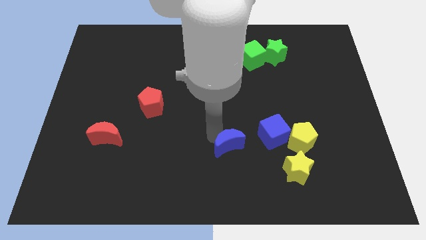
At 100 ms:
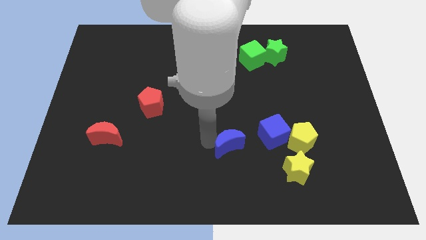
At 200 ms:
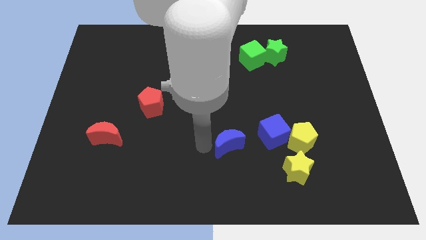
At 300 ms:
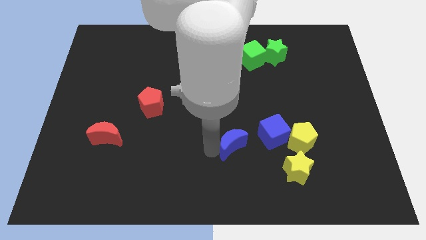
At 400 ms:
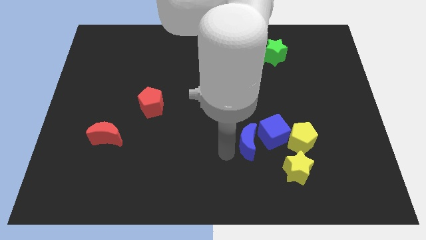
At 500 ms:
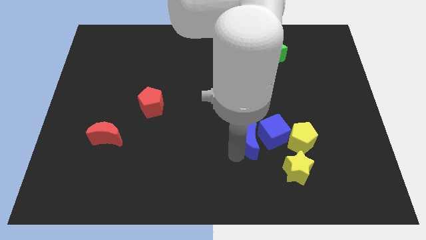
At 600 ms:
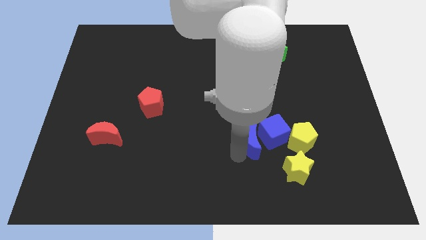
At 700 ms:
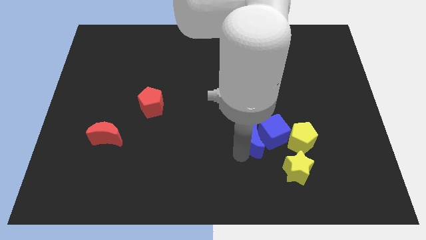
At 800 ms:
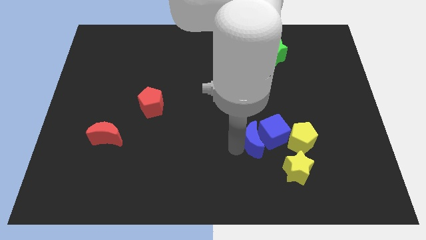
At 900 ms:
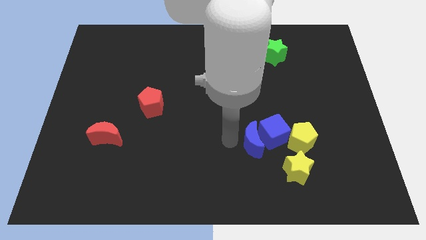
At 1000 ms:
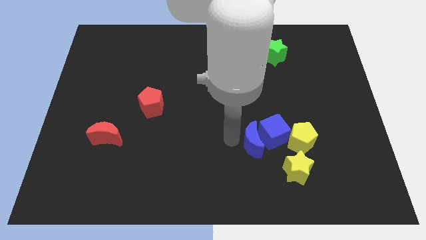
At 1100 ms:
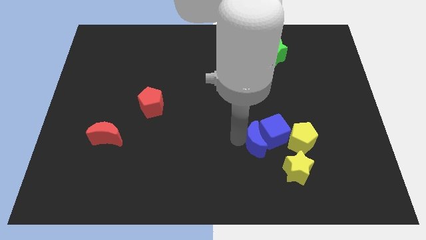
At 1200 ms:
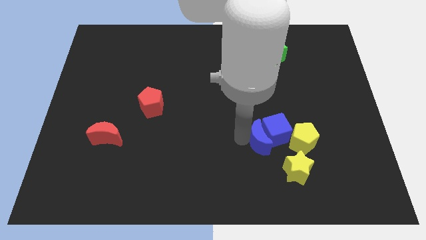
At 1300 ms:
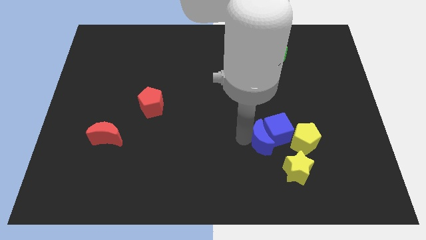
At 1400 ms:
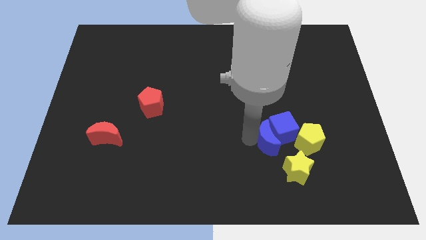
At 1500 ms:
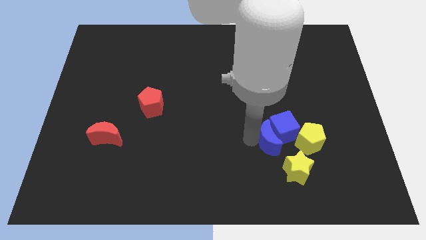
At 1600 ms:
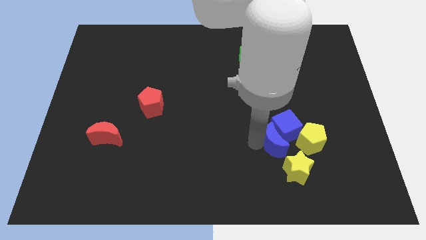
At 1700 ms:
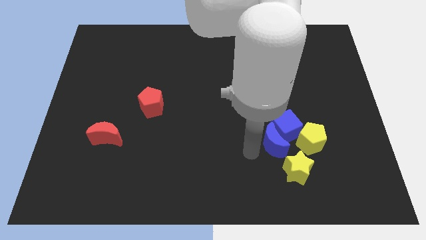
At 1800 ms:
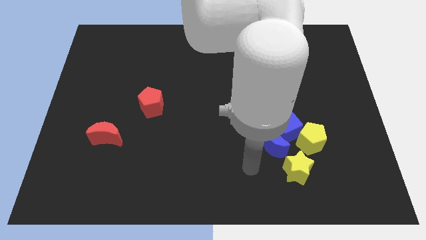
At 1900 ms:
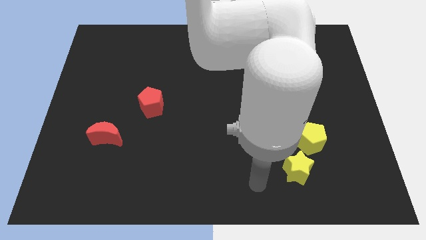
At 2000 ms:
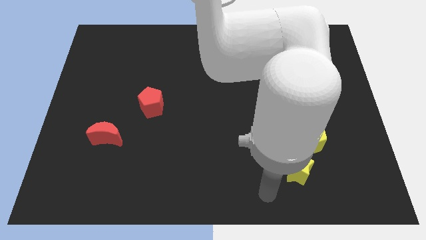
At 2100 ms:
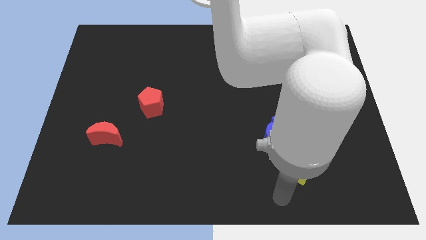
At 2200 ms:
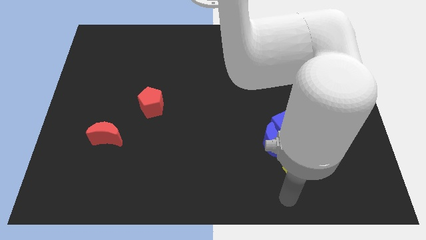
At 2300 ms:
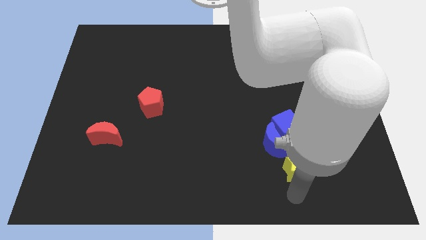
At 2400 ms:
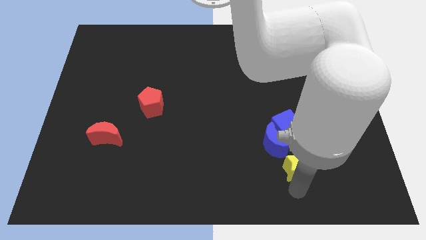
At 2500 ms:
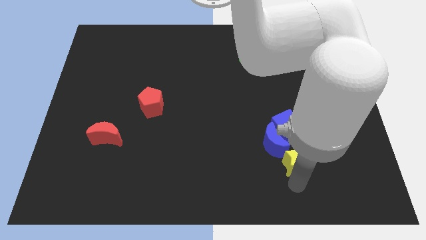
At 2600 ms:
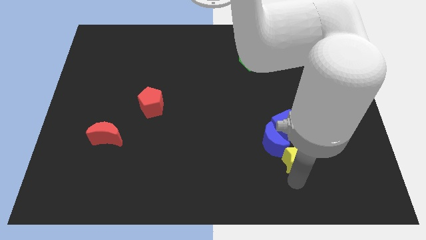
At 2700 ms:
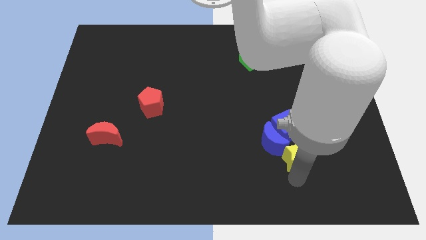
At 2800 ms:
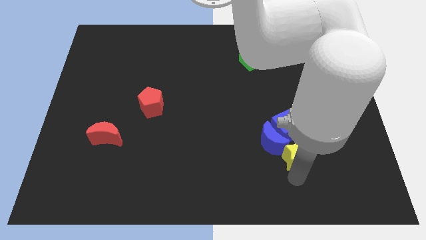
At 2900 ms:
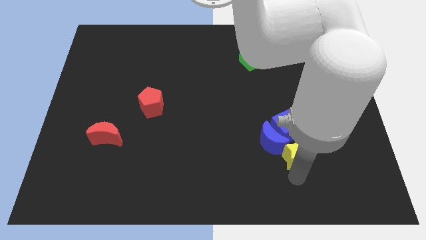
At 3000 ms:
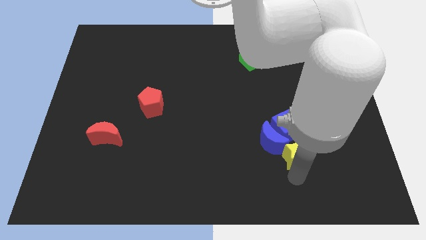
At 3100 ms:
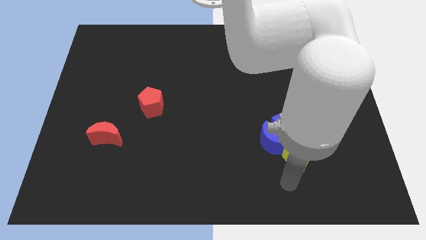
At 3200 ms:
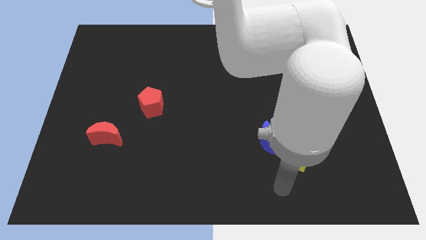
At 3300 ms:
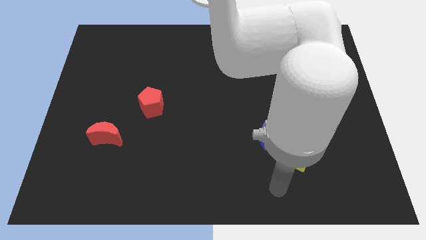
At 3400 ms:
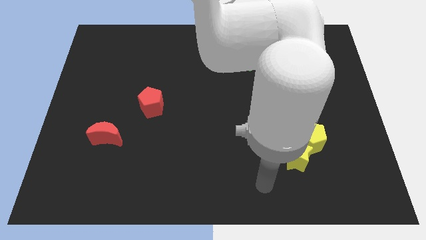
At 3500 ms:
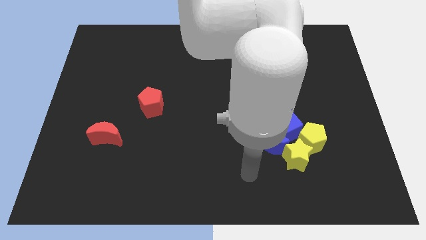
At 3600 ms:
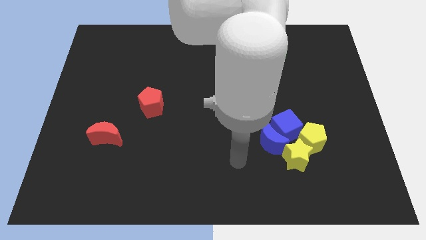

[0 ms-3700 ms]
push the yellow star into the group of blocks

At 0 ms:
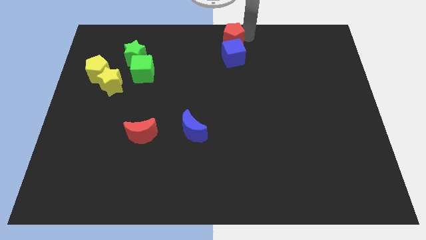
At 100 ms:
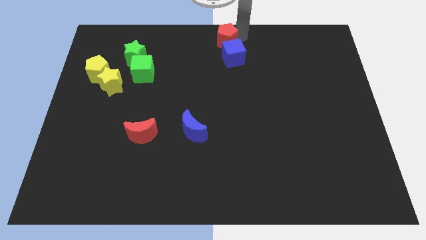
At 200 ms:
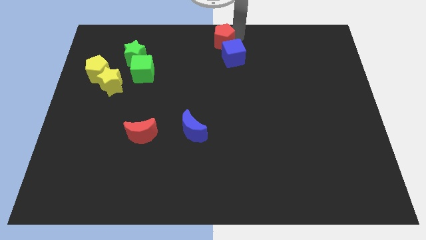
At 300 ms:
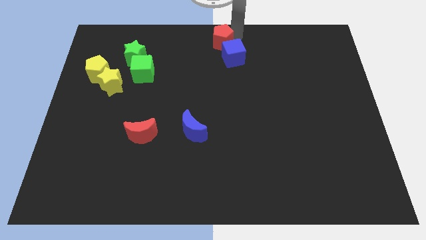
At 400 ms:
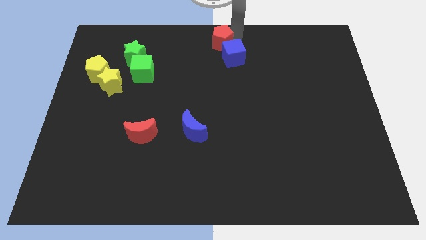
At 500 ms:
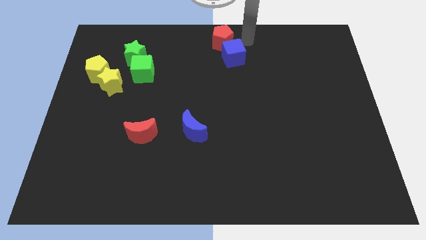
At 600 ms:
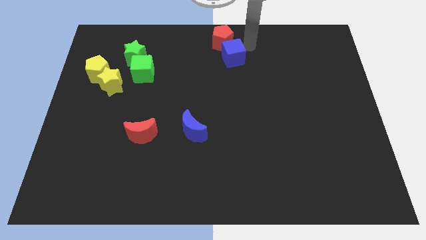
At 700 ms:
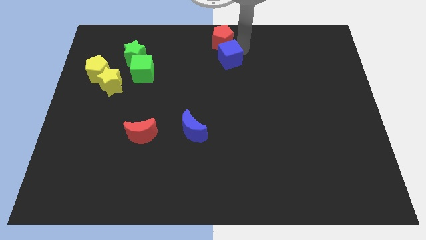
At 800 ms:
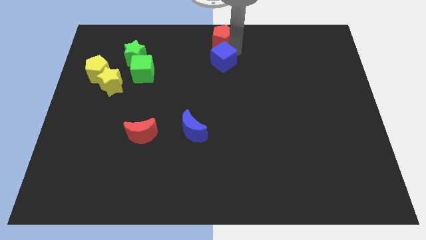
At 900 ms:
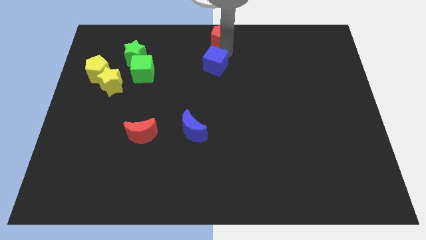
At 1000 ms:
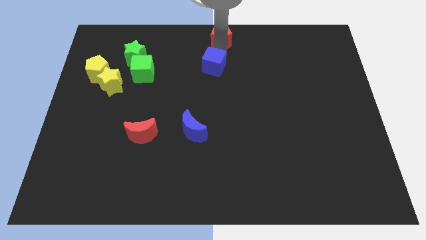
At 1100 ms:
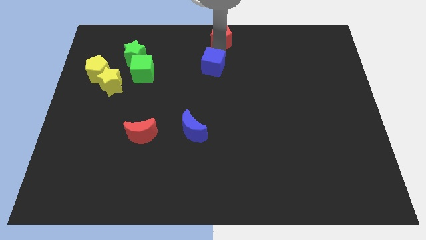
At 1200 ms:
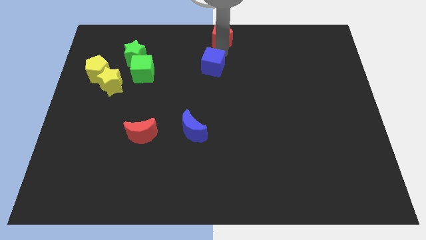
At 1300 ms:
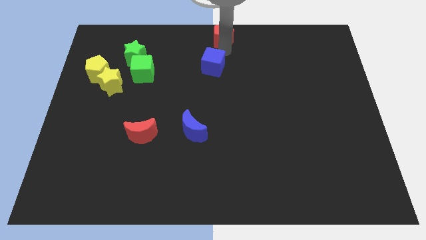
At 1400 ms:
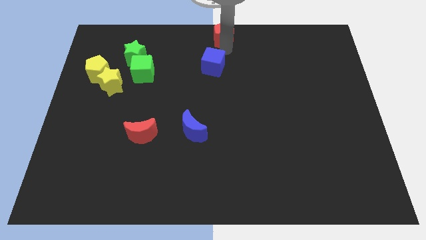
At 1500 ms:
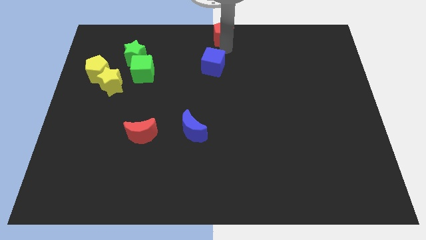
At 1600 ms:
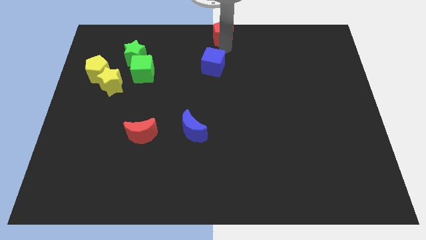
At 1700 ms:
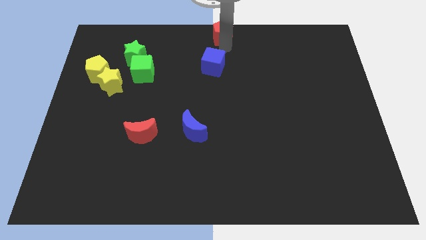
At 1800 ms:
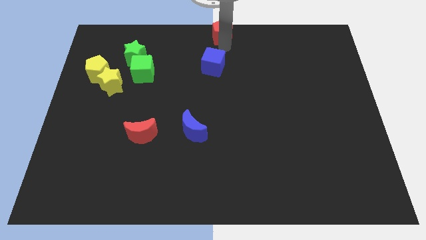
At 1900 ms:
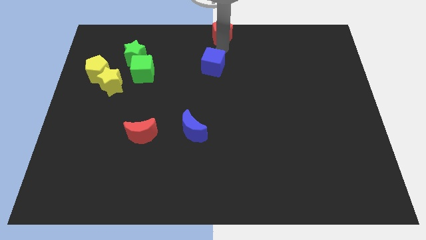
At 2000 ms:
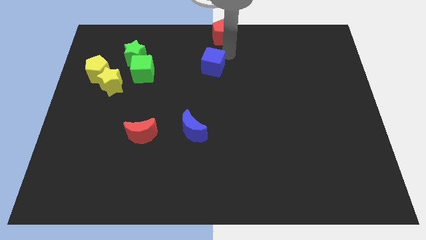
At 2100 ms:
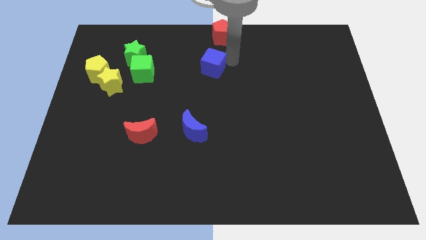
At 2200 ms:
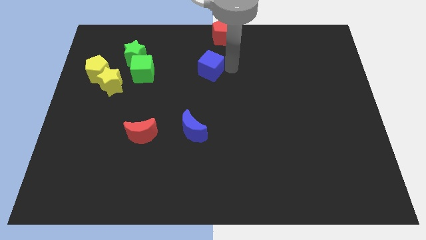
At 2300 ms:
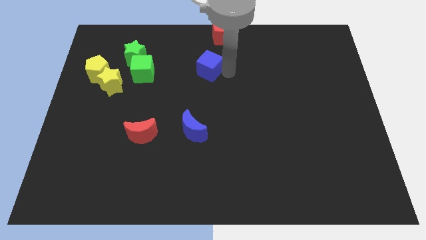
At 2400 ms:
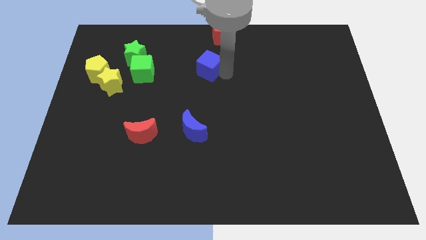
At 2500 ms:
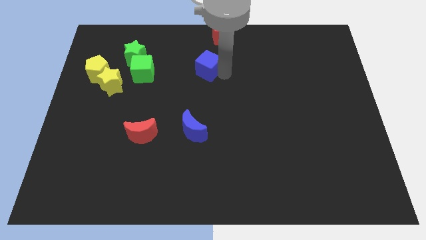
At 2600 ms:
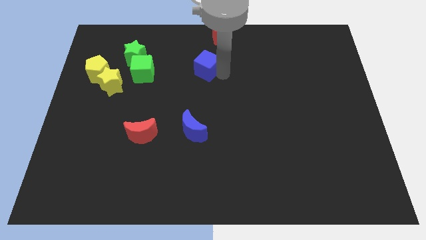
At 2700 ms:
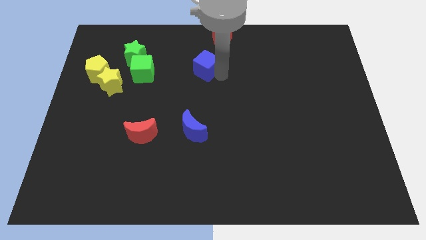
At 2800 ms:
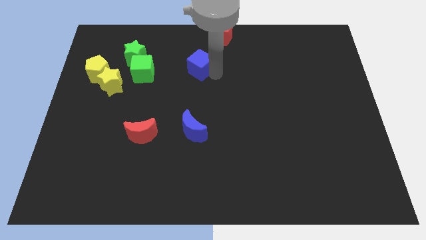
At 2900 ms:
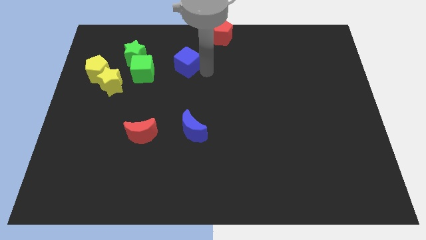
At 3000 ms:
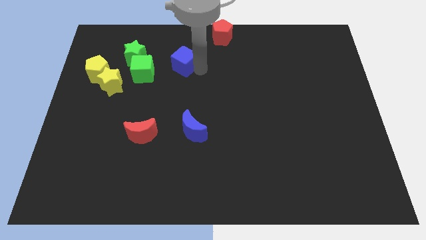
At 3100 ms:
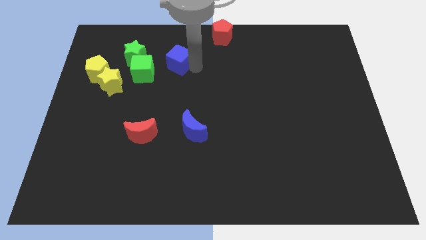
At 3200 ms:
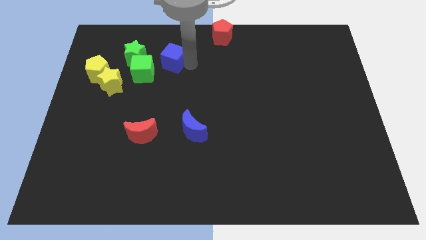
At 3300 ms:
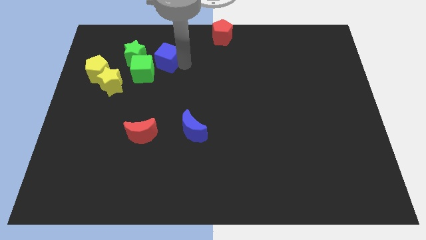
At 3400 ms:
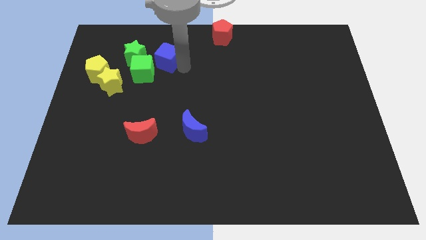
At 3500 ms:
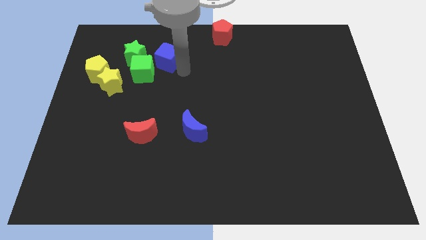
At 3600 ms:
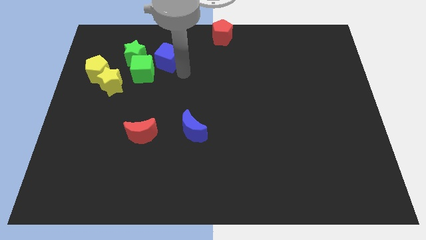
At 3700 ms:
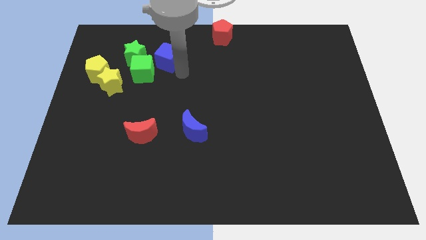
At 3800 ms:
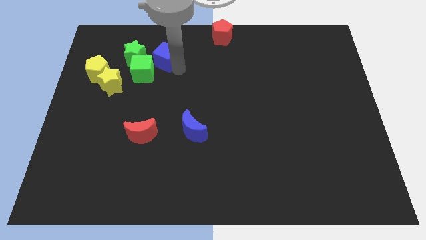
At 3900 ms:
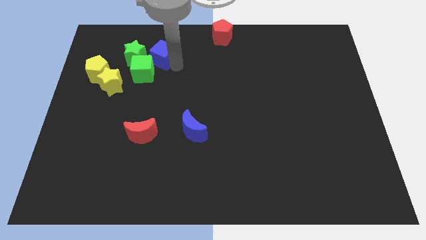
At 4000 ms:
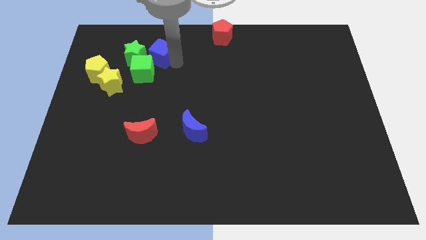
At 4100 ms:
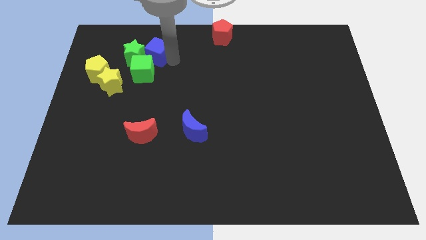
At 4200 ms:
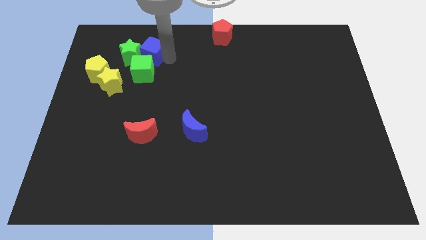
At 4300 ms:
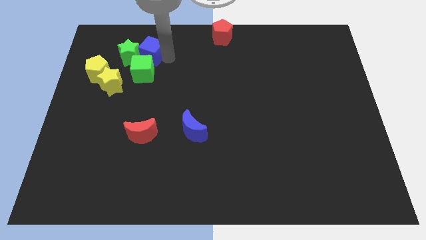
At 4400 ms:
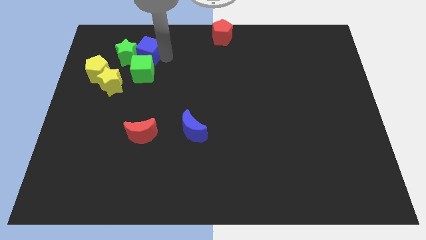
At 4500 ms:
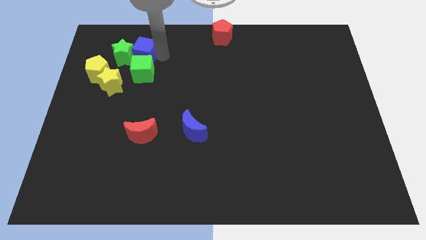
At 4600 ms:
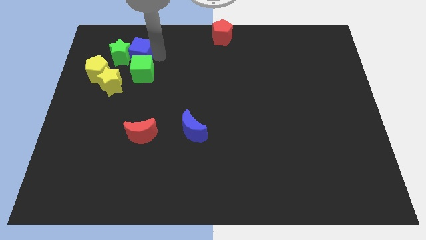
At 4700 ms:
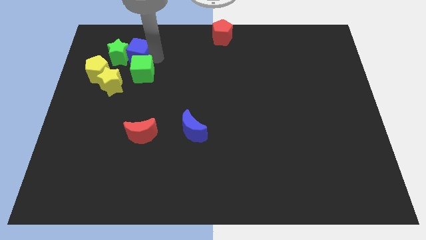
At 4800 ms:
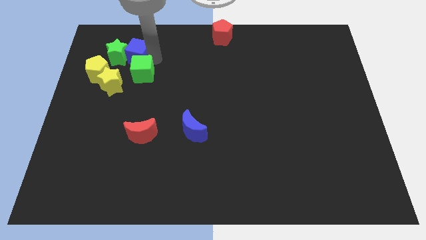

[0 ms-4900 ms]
place blue cube to the top of the green cube

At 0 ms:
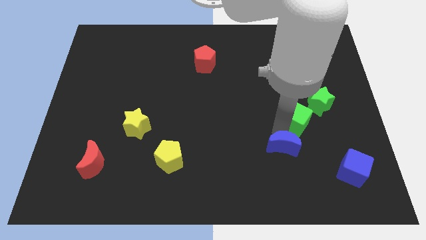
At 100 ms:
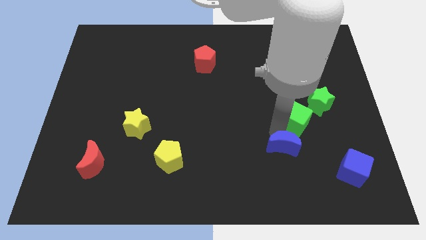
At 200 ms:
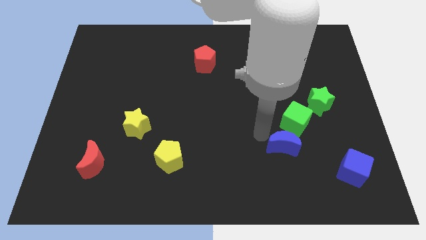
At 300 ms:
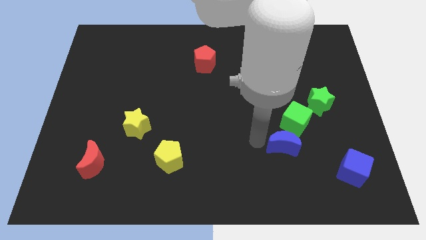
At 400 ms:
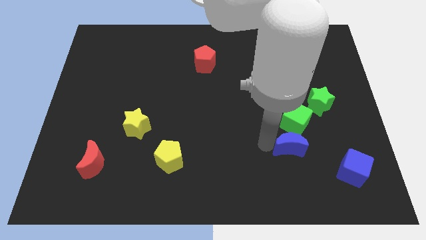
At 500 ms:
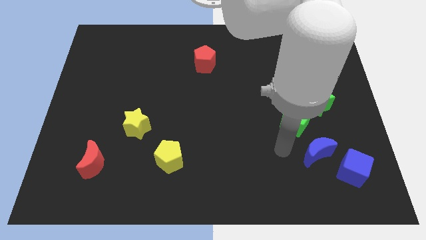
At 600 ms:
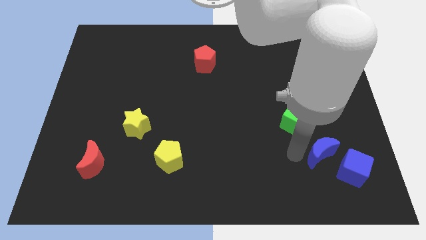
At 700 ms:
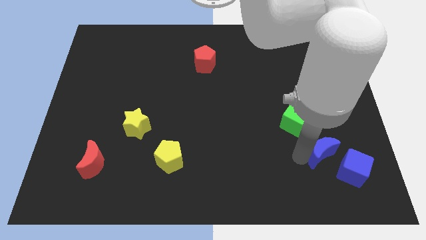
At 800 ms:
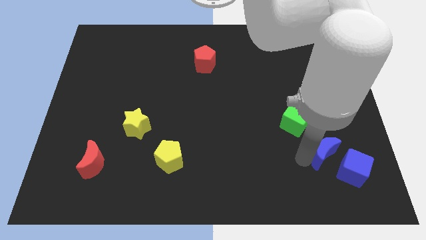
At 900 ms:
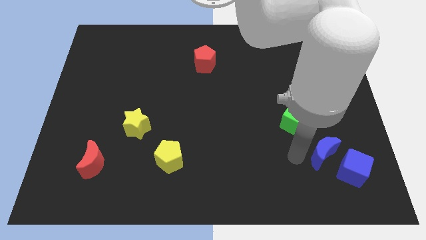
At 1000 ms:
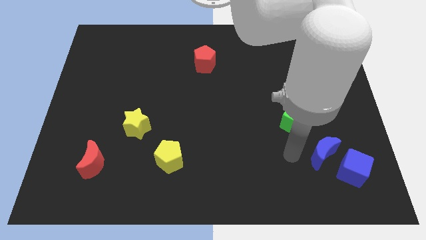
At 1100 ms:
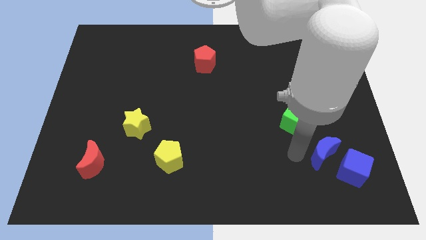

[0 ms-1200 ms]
push the blue crescent towards the left side of the blue cube
